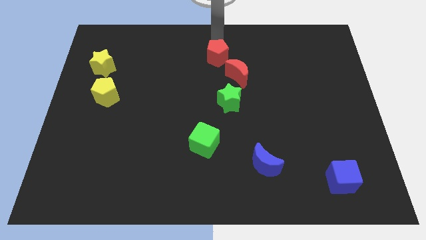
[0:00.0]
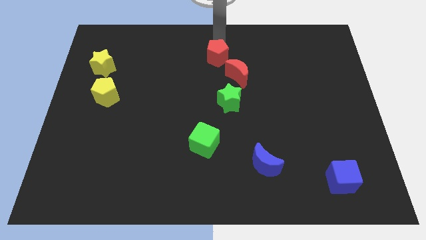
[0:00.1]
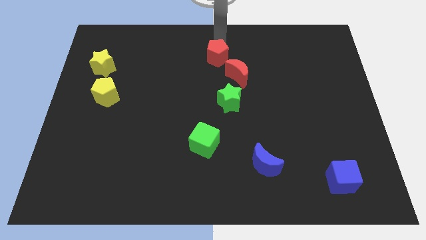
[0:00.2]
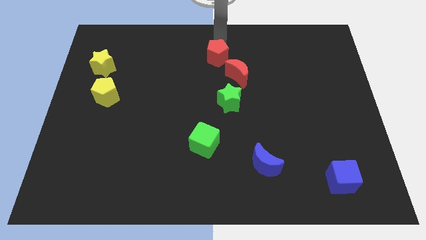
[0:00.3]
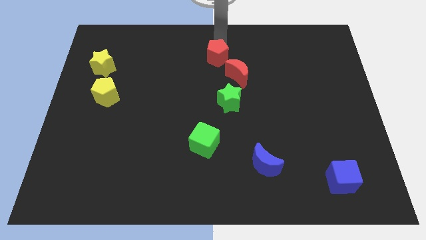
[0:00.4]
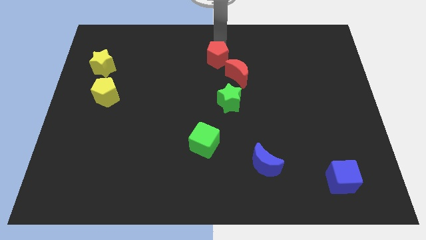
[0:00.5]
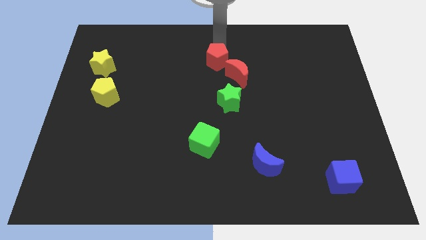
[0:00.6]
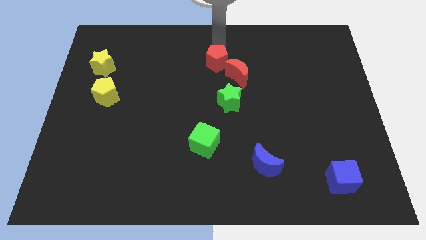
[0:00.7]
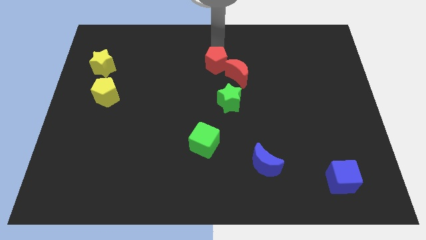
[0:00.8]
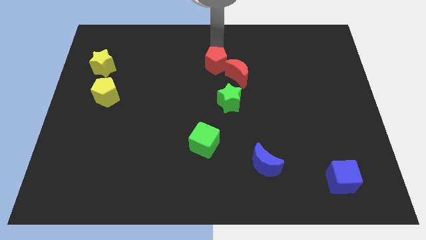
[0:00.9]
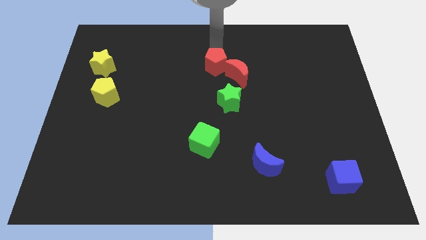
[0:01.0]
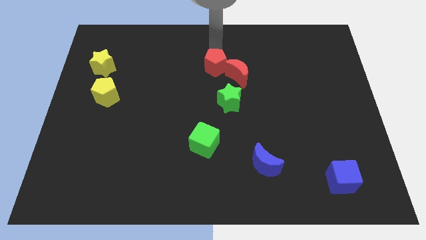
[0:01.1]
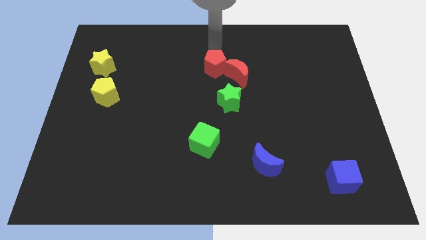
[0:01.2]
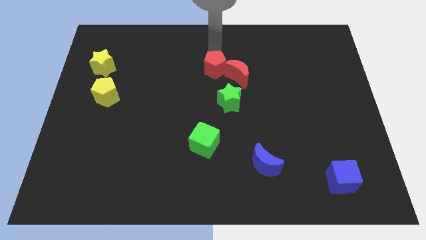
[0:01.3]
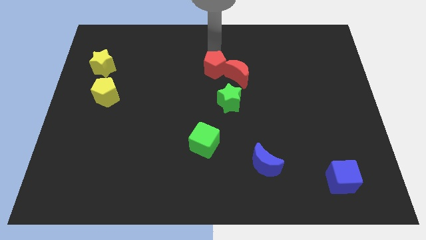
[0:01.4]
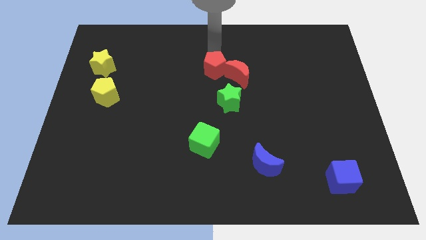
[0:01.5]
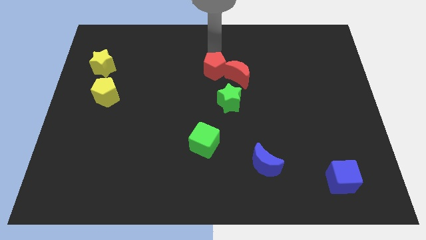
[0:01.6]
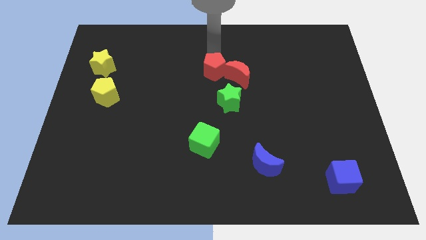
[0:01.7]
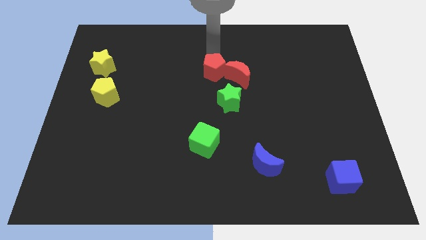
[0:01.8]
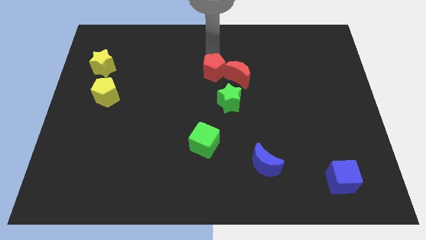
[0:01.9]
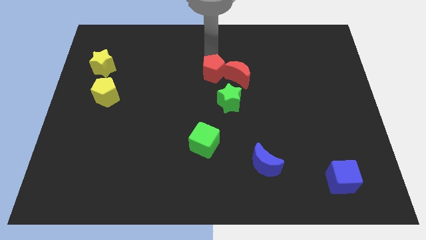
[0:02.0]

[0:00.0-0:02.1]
move the red pentagon into the left side of the red moon

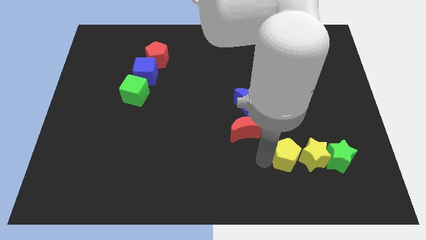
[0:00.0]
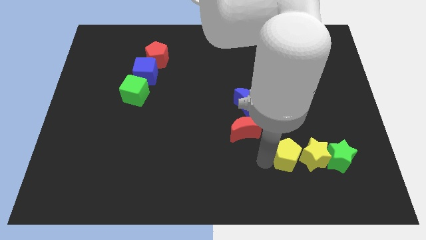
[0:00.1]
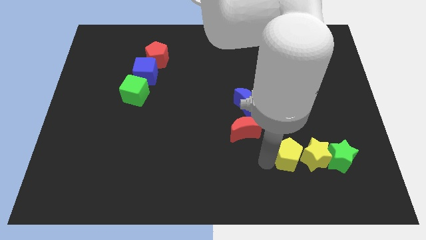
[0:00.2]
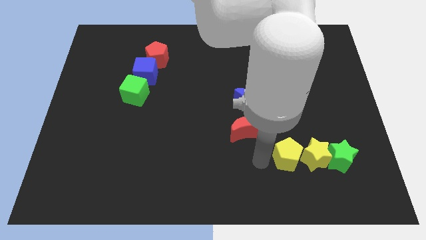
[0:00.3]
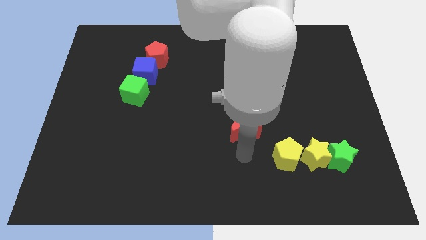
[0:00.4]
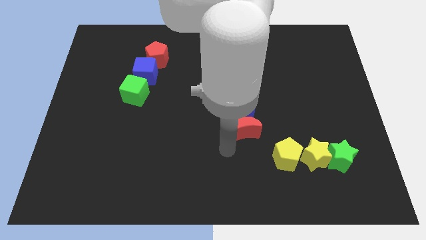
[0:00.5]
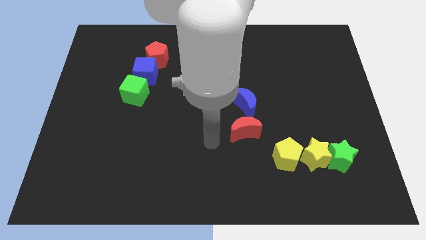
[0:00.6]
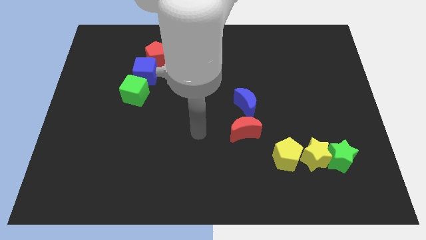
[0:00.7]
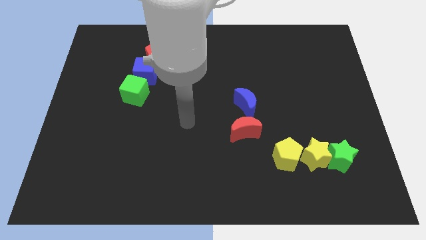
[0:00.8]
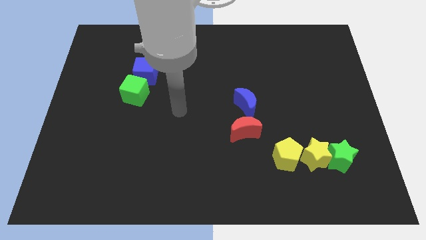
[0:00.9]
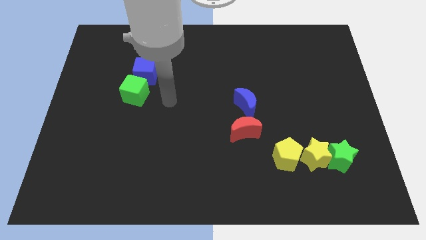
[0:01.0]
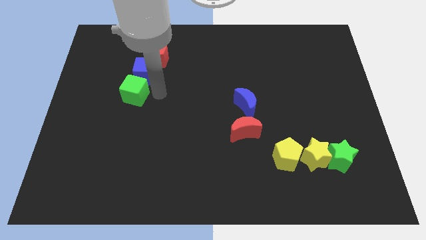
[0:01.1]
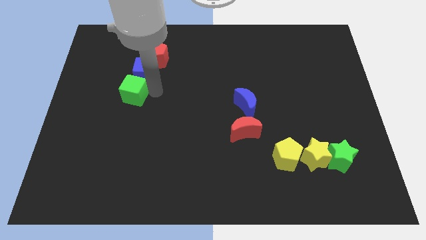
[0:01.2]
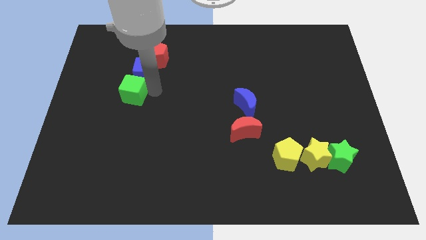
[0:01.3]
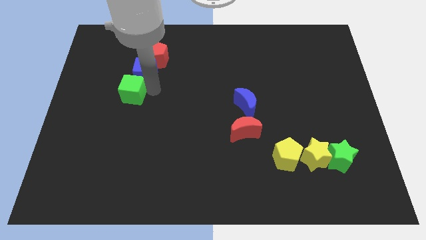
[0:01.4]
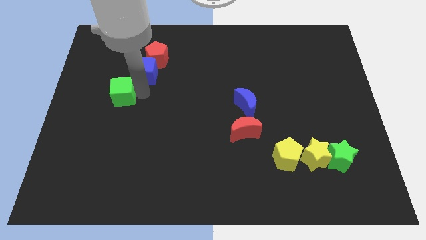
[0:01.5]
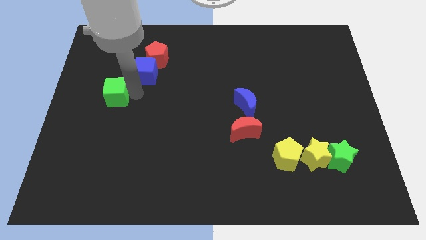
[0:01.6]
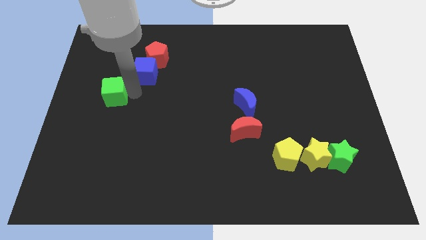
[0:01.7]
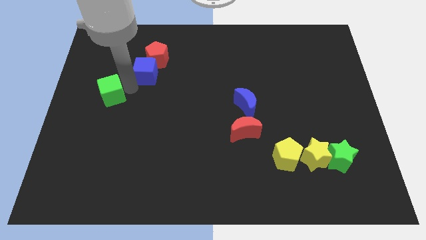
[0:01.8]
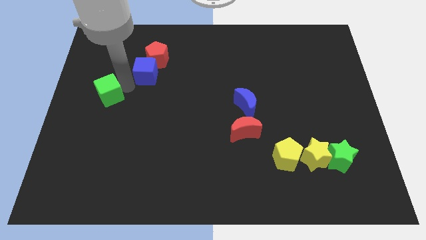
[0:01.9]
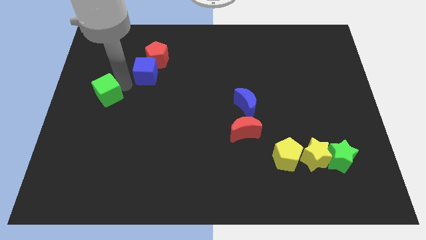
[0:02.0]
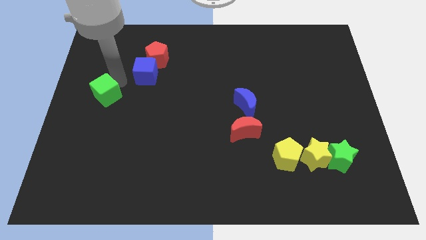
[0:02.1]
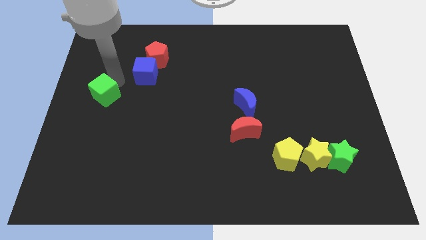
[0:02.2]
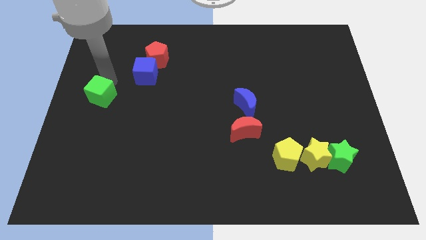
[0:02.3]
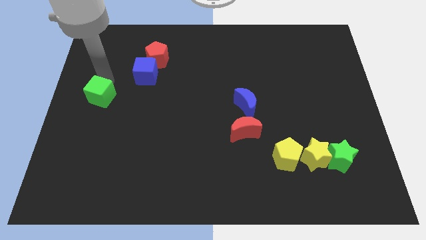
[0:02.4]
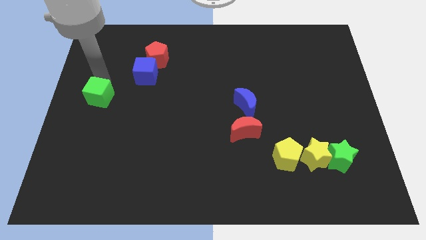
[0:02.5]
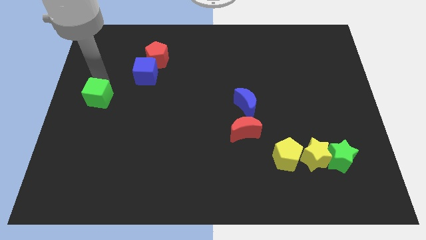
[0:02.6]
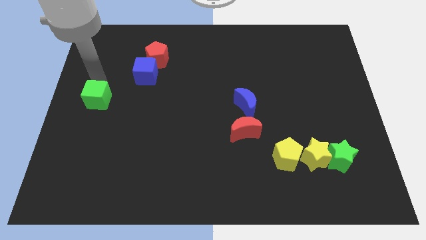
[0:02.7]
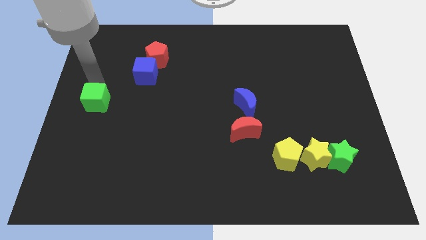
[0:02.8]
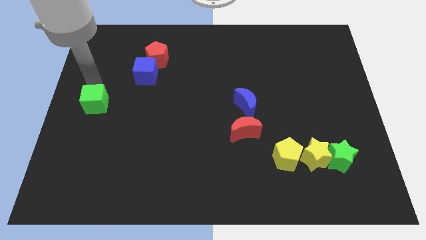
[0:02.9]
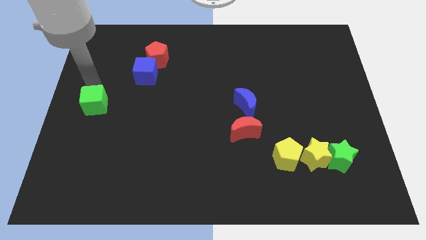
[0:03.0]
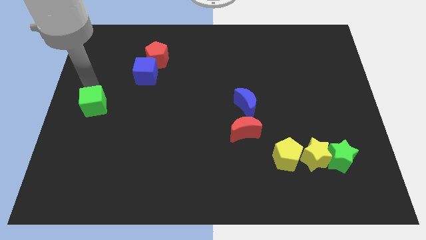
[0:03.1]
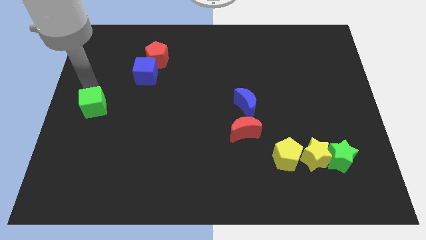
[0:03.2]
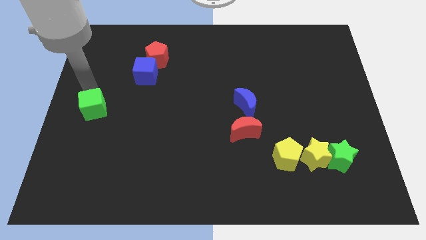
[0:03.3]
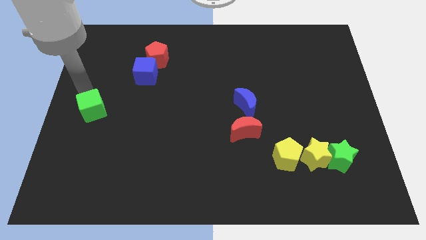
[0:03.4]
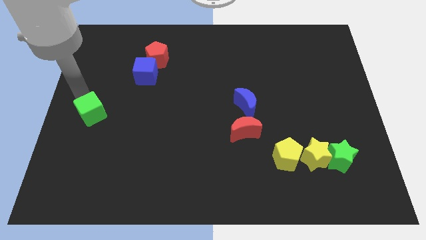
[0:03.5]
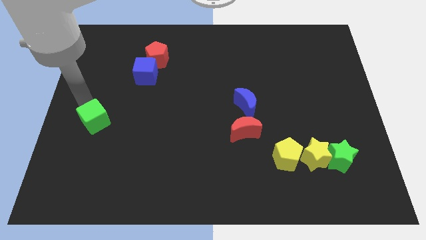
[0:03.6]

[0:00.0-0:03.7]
move green cube to center left

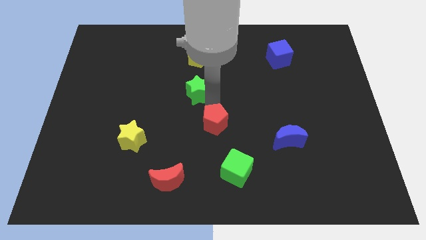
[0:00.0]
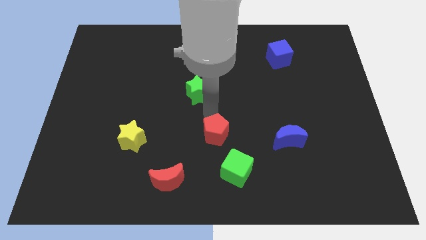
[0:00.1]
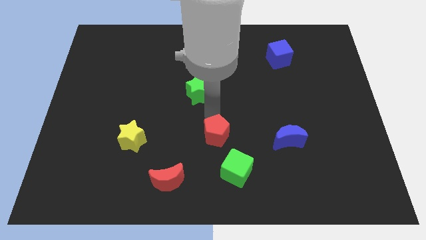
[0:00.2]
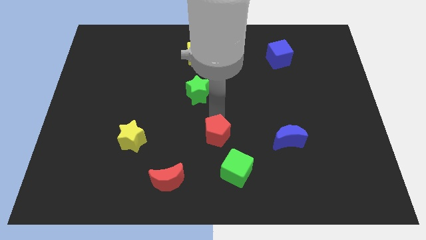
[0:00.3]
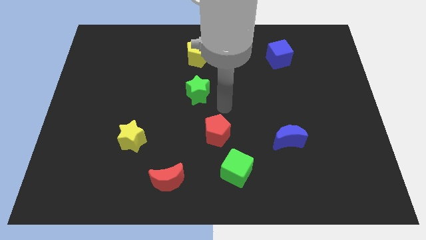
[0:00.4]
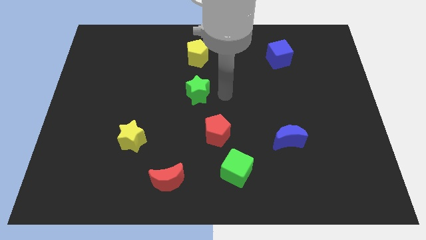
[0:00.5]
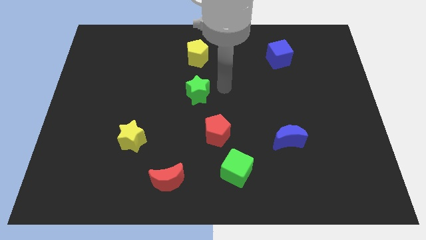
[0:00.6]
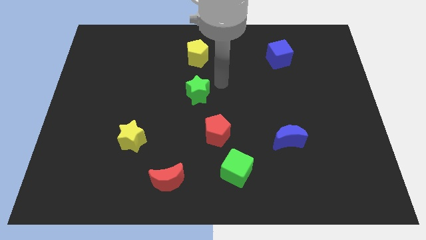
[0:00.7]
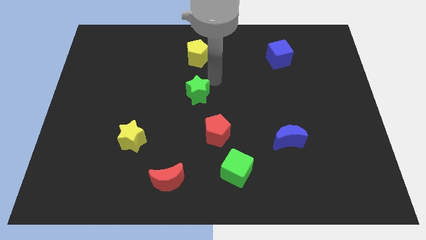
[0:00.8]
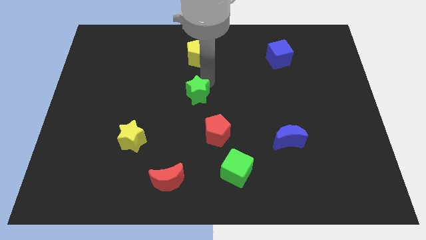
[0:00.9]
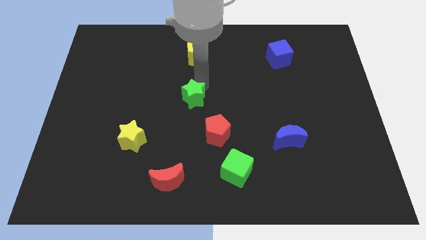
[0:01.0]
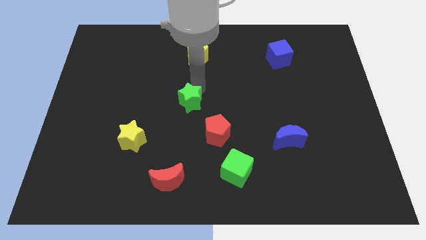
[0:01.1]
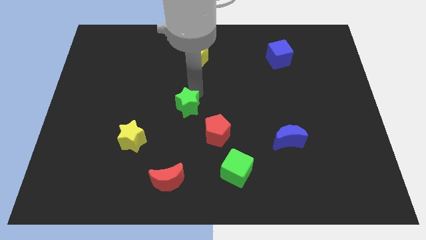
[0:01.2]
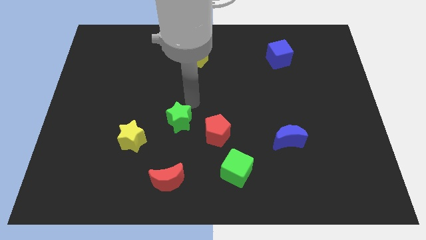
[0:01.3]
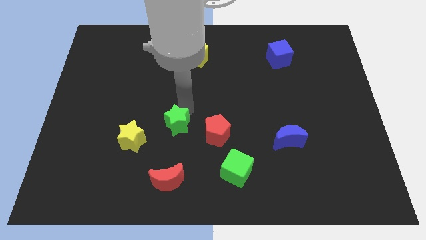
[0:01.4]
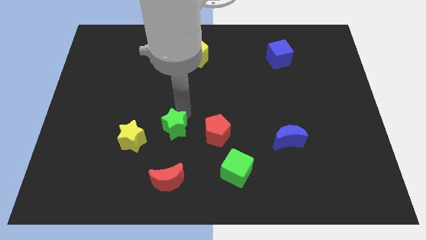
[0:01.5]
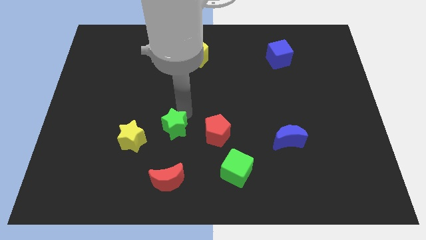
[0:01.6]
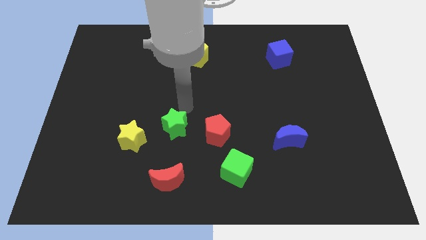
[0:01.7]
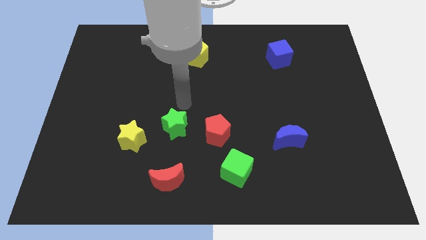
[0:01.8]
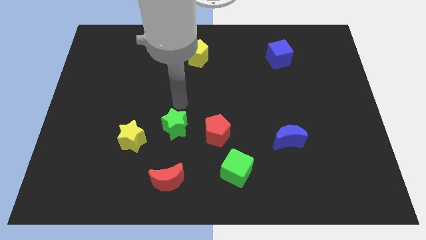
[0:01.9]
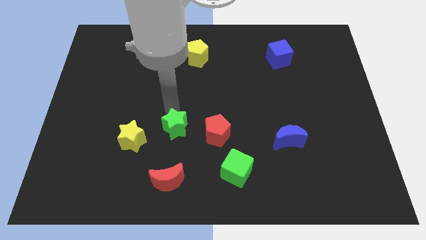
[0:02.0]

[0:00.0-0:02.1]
move green star in between the red pentagon and yellow star

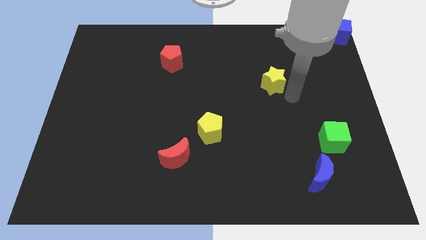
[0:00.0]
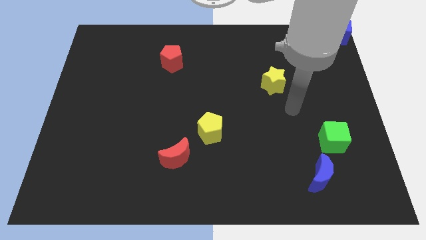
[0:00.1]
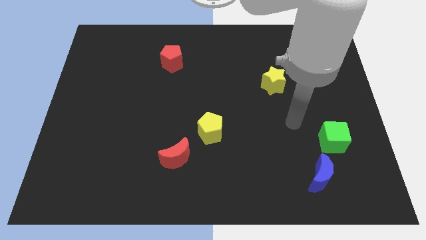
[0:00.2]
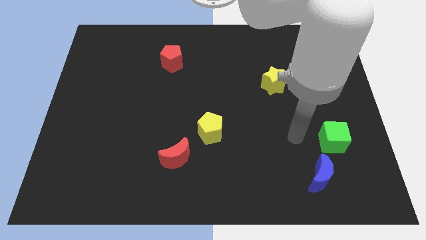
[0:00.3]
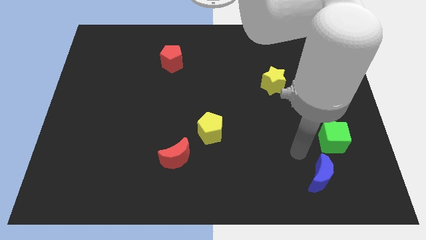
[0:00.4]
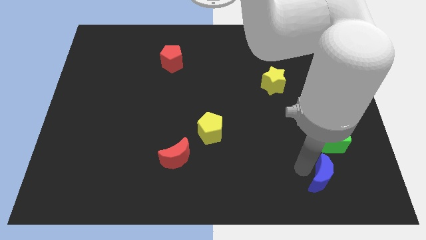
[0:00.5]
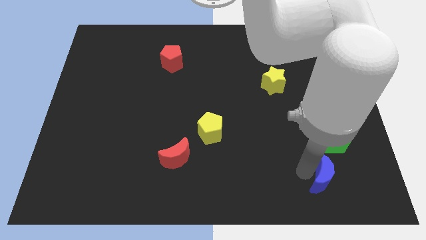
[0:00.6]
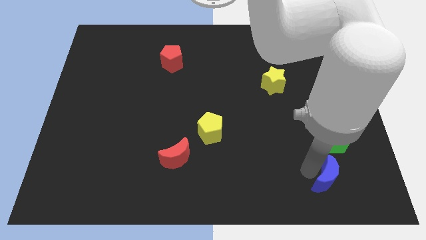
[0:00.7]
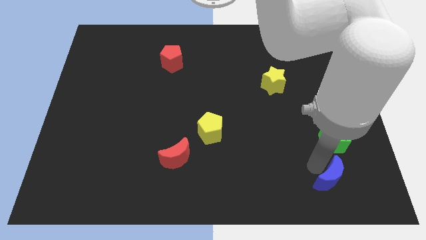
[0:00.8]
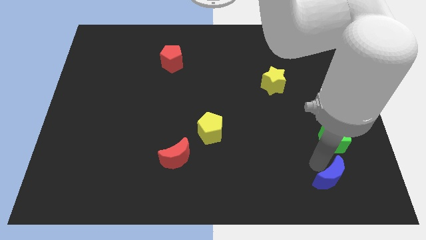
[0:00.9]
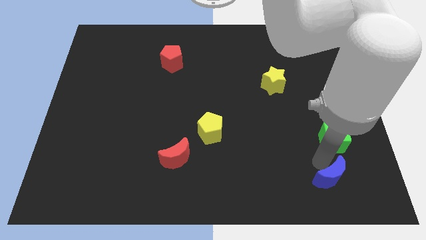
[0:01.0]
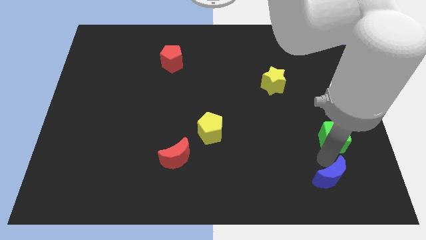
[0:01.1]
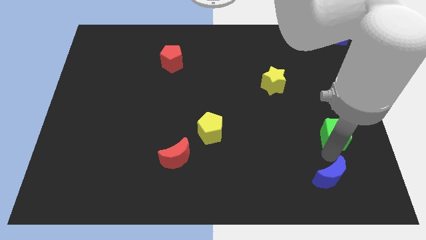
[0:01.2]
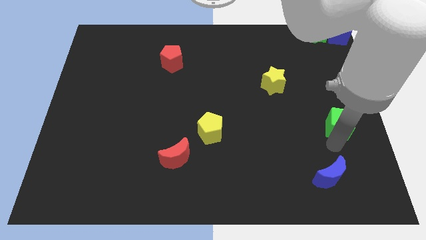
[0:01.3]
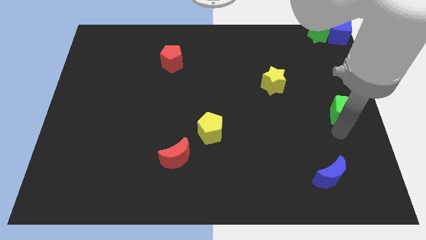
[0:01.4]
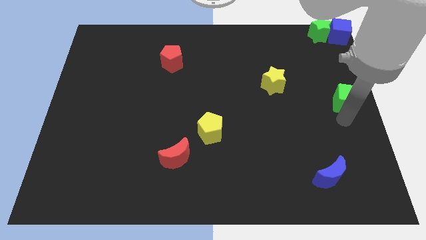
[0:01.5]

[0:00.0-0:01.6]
move the green cube to the bottom side of the blue cube
